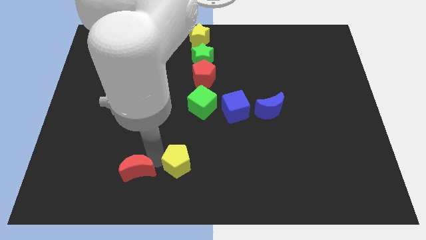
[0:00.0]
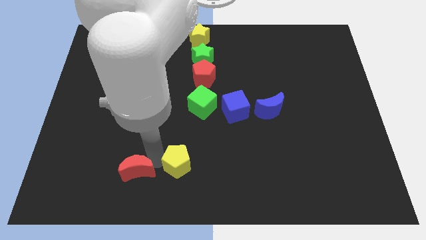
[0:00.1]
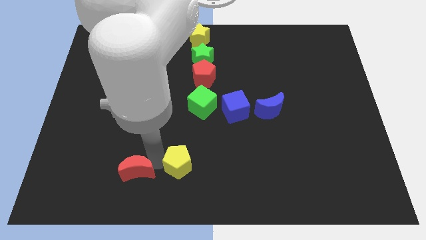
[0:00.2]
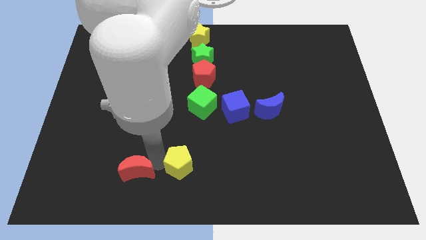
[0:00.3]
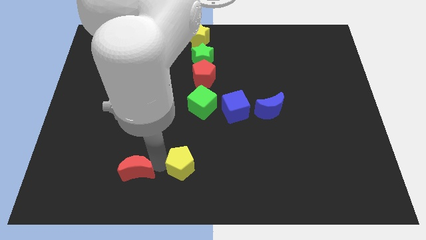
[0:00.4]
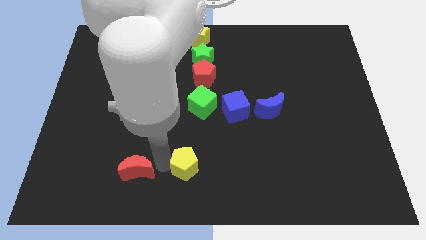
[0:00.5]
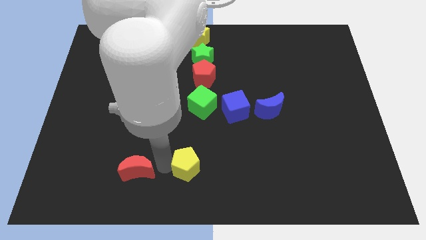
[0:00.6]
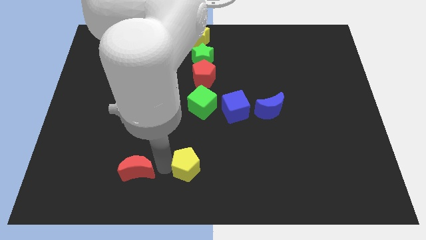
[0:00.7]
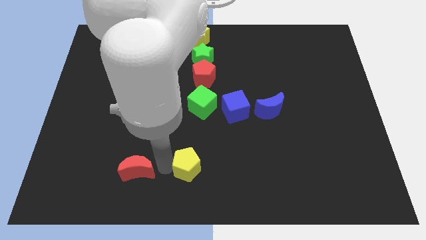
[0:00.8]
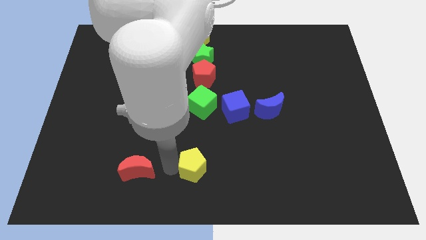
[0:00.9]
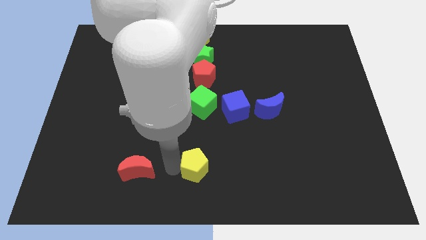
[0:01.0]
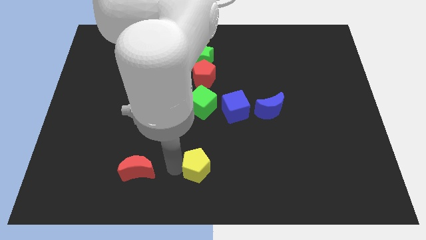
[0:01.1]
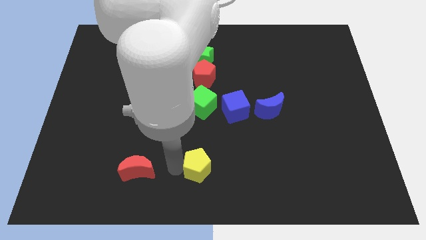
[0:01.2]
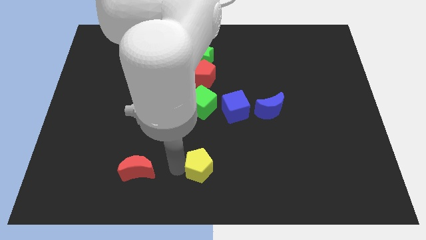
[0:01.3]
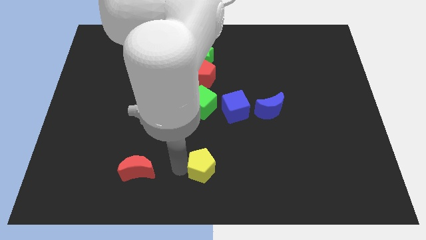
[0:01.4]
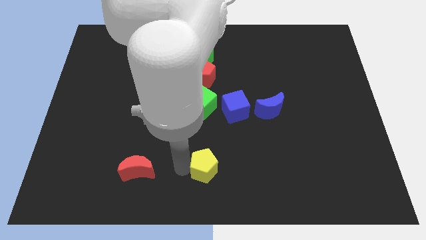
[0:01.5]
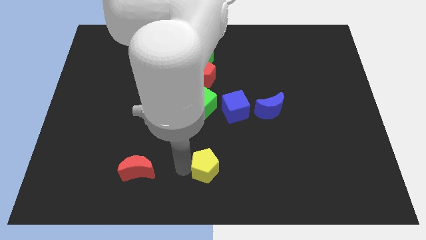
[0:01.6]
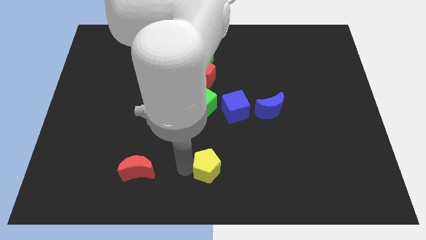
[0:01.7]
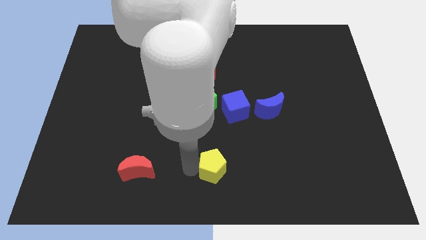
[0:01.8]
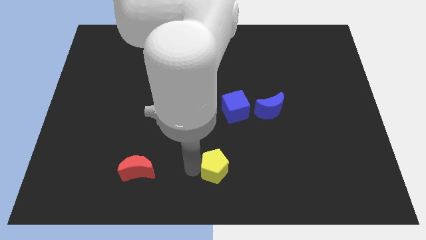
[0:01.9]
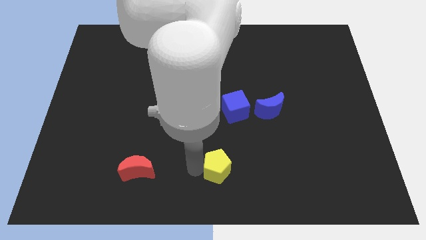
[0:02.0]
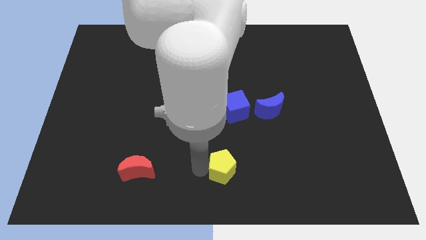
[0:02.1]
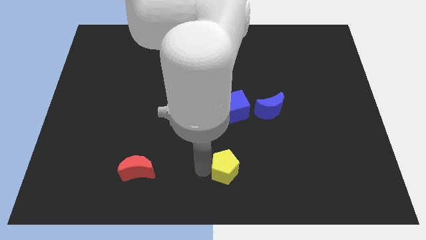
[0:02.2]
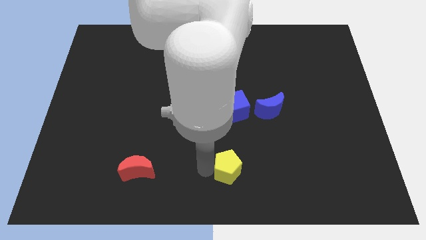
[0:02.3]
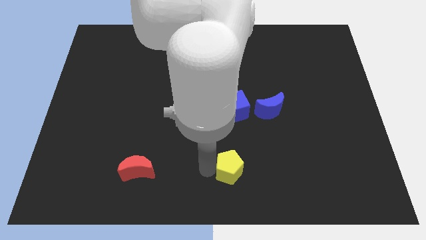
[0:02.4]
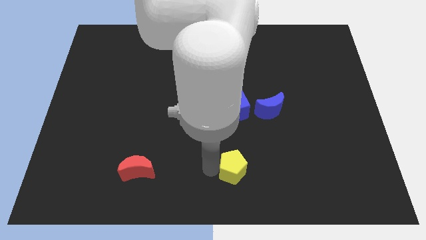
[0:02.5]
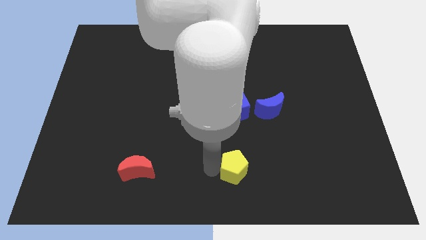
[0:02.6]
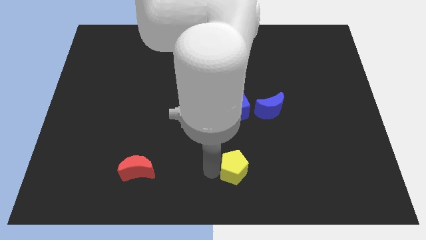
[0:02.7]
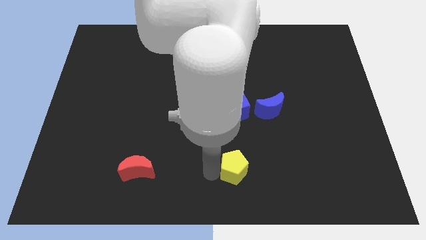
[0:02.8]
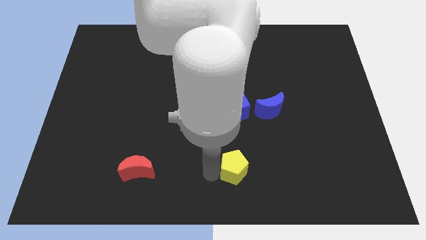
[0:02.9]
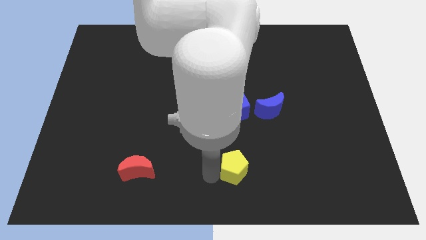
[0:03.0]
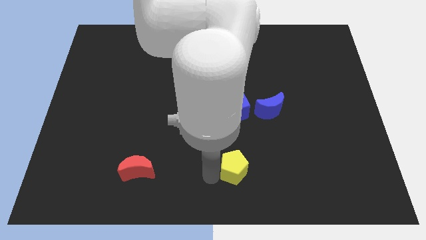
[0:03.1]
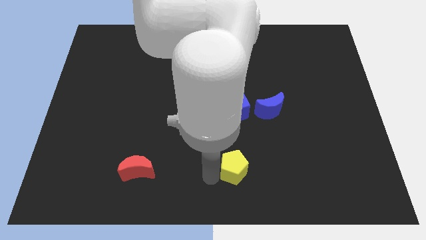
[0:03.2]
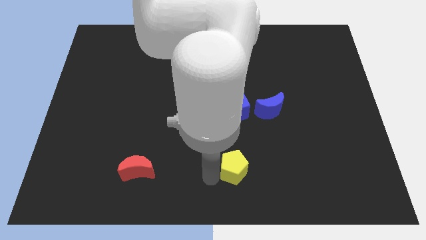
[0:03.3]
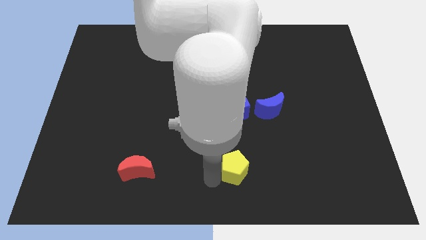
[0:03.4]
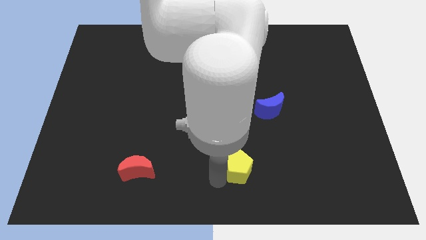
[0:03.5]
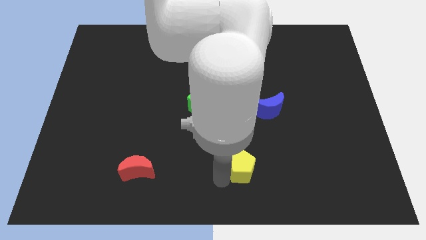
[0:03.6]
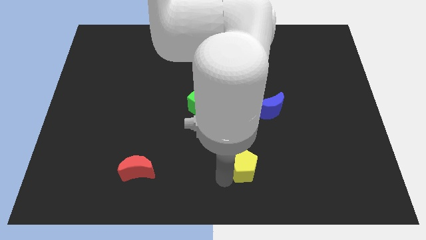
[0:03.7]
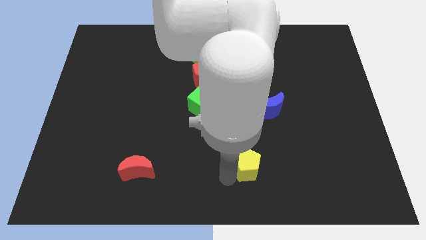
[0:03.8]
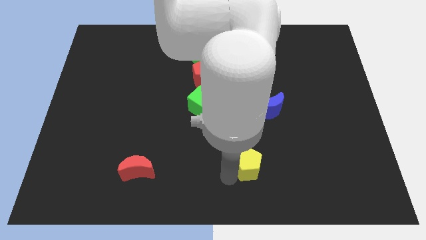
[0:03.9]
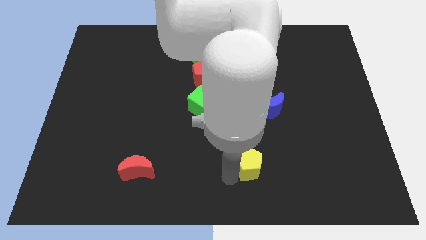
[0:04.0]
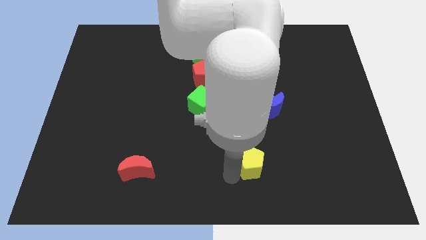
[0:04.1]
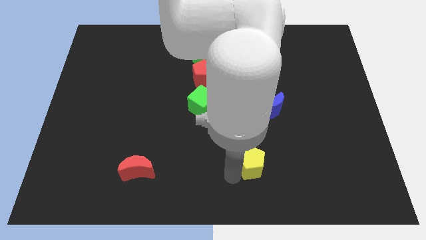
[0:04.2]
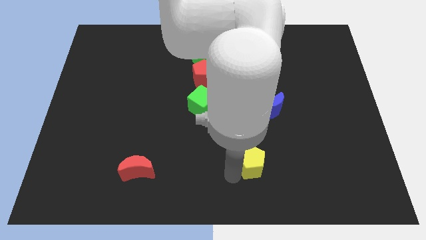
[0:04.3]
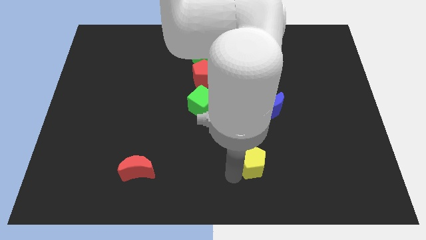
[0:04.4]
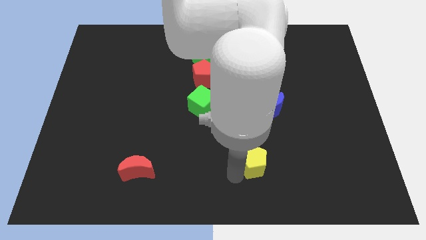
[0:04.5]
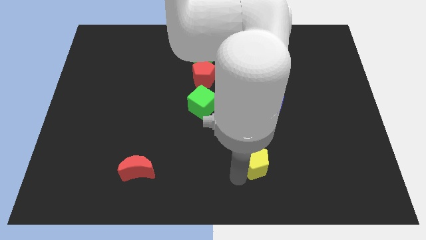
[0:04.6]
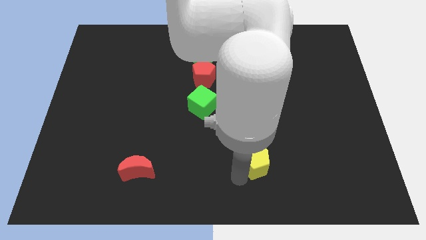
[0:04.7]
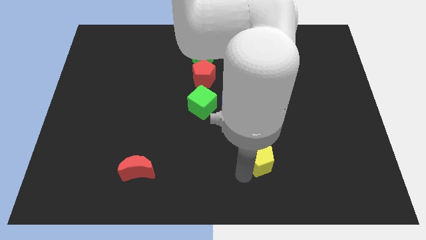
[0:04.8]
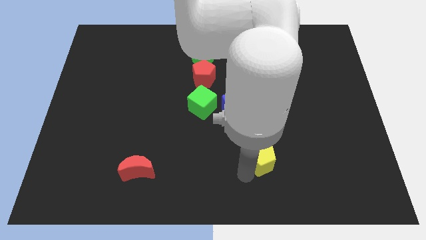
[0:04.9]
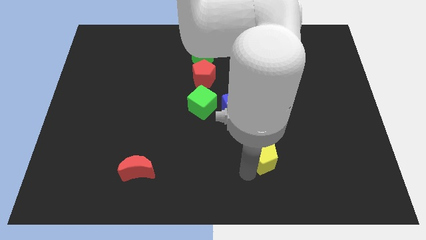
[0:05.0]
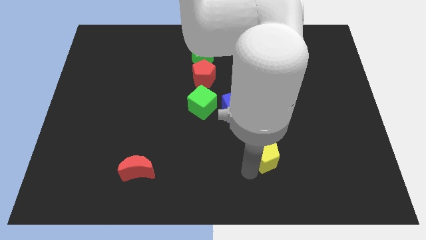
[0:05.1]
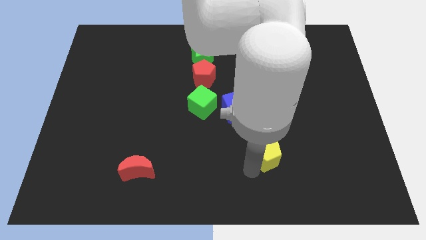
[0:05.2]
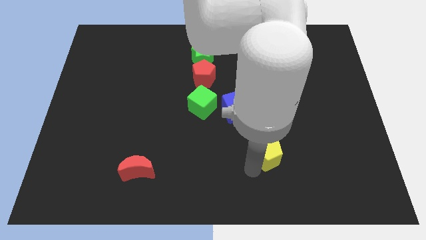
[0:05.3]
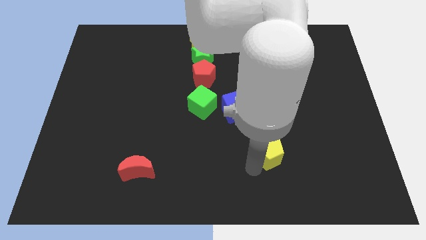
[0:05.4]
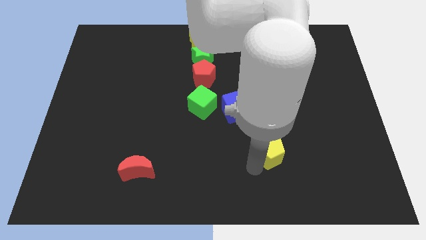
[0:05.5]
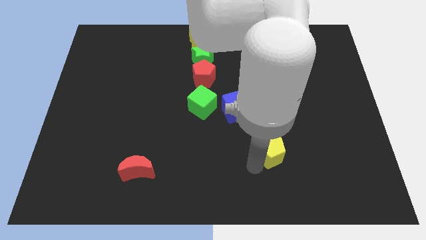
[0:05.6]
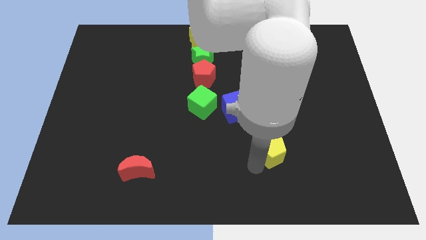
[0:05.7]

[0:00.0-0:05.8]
push the yellow pentagon to the right

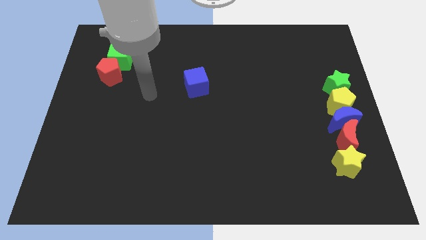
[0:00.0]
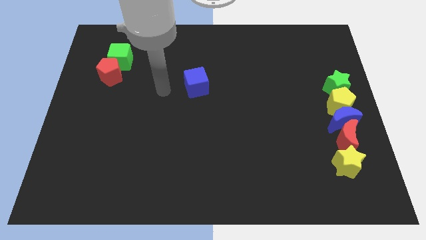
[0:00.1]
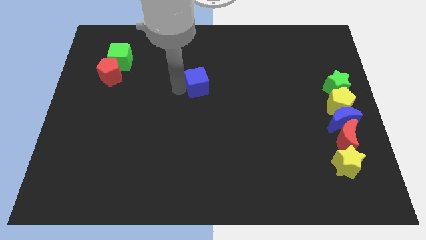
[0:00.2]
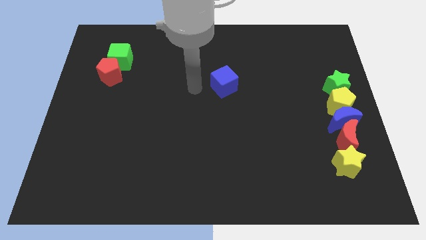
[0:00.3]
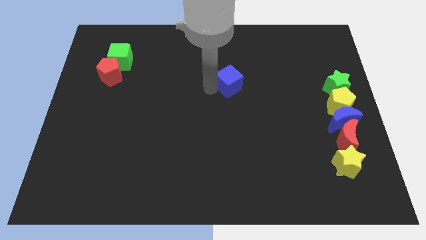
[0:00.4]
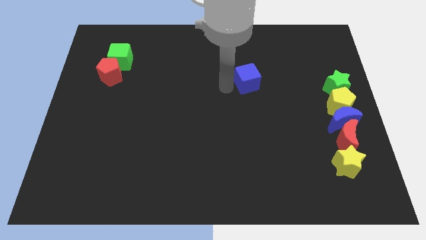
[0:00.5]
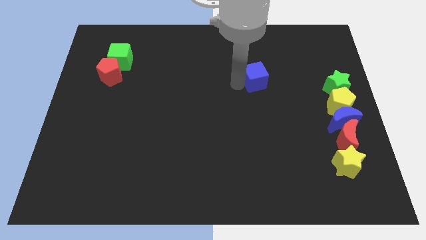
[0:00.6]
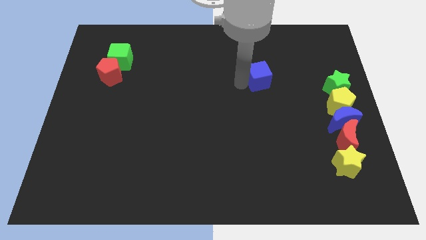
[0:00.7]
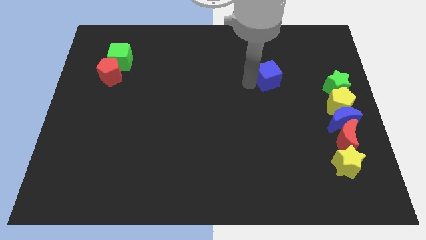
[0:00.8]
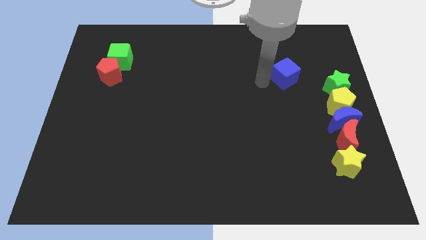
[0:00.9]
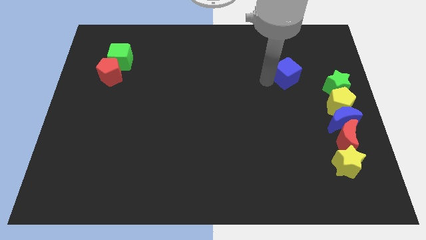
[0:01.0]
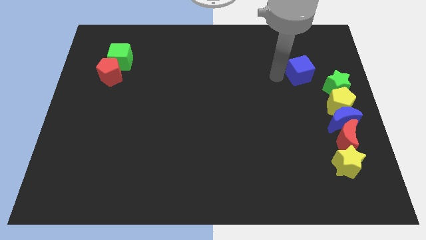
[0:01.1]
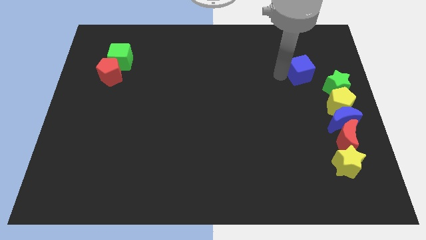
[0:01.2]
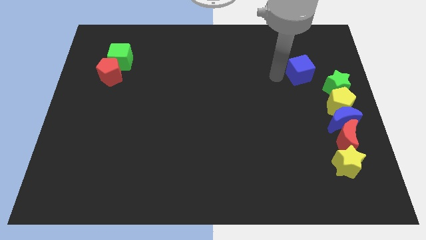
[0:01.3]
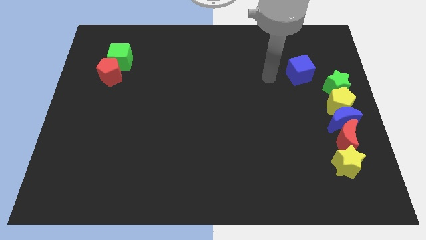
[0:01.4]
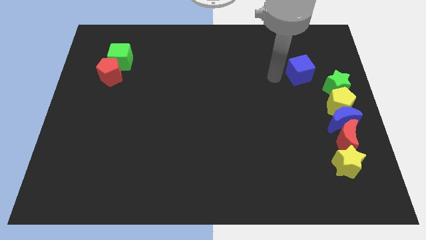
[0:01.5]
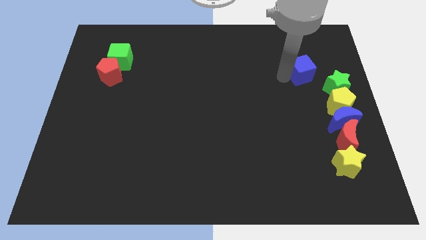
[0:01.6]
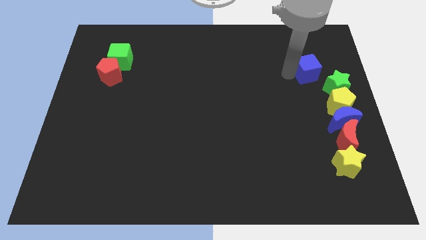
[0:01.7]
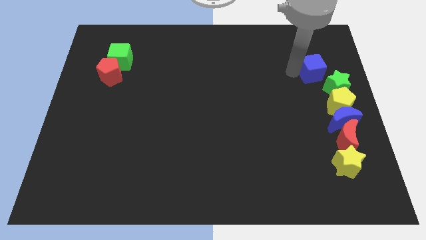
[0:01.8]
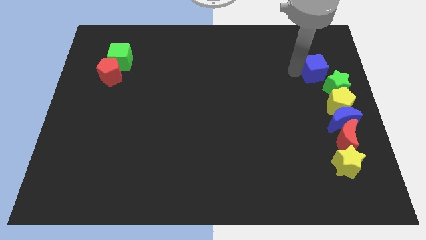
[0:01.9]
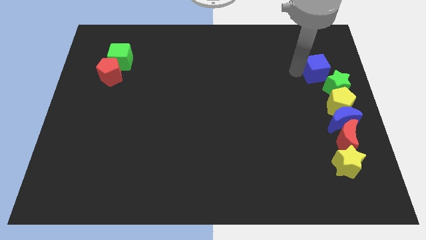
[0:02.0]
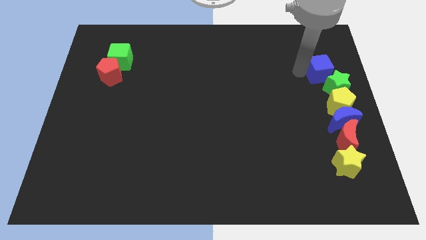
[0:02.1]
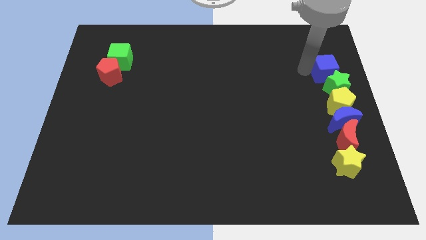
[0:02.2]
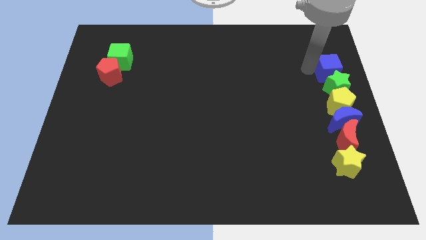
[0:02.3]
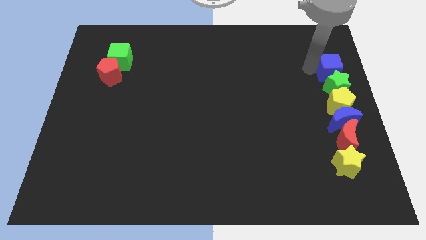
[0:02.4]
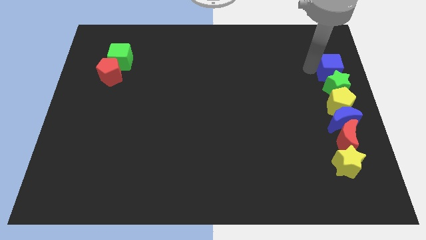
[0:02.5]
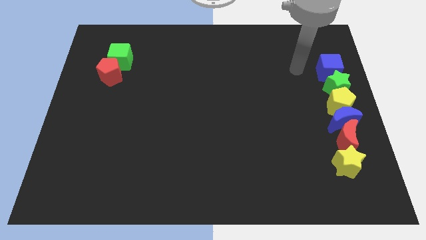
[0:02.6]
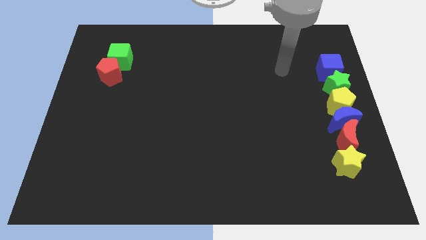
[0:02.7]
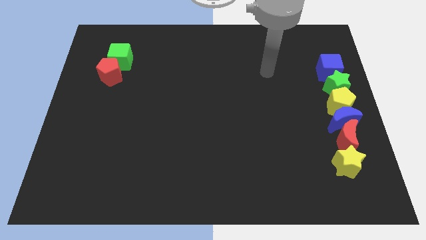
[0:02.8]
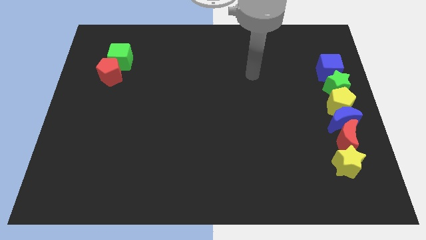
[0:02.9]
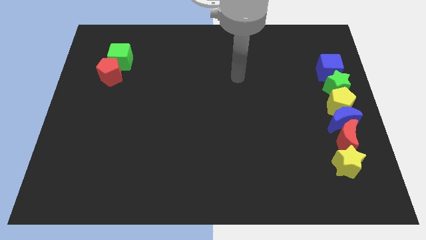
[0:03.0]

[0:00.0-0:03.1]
place the blue cube above the green star
